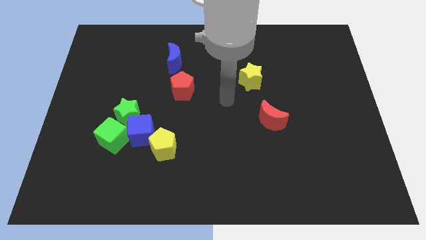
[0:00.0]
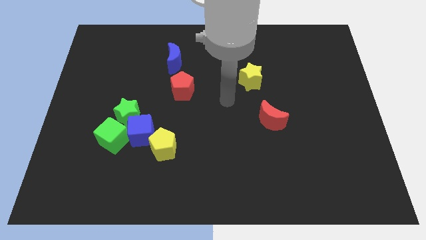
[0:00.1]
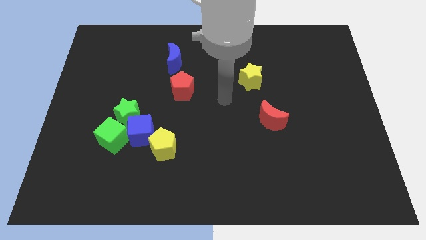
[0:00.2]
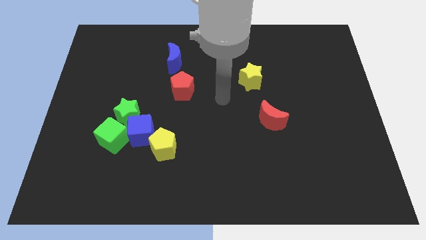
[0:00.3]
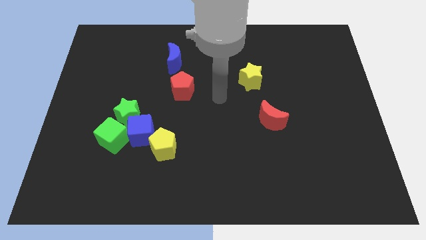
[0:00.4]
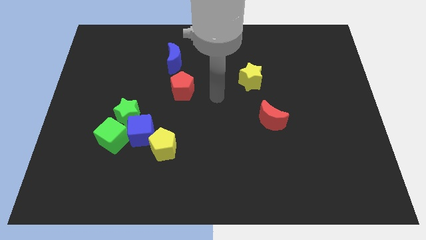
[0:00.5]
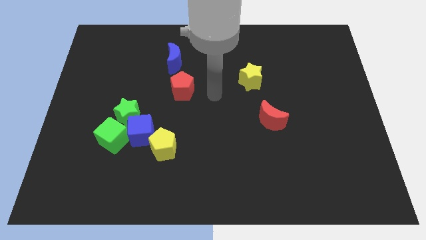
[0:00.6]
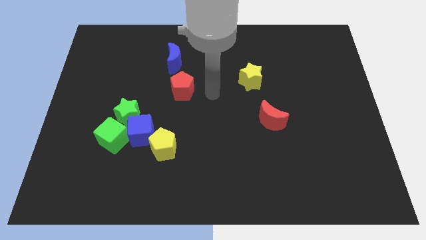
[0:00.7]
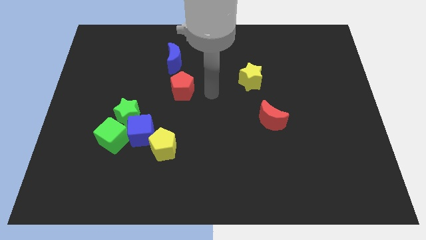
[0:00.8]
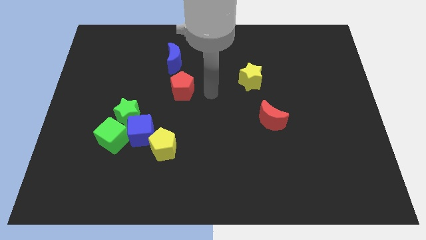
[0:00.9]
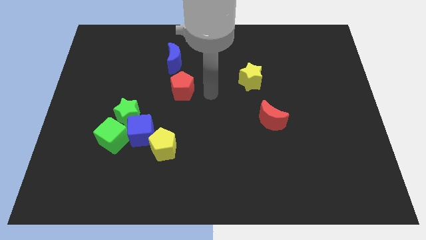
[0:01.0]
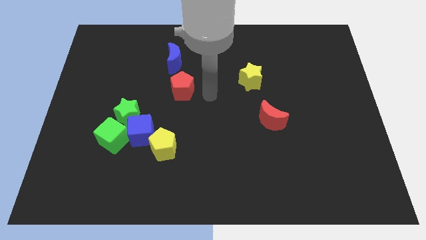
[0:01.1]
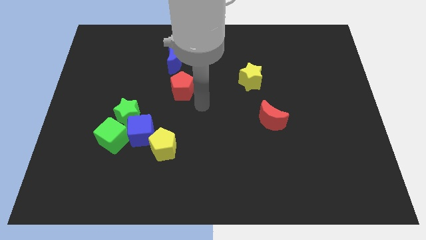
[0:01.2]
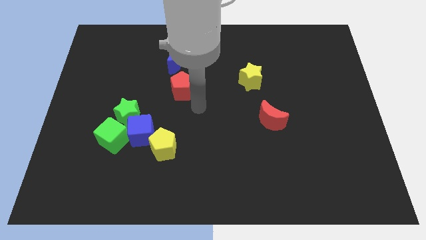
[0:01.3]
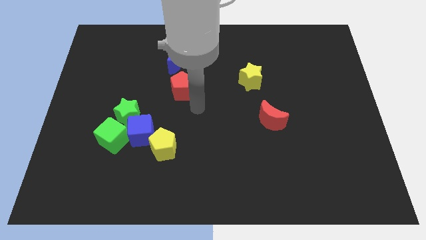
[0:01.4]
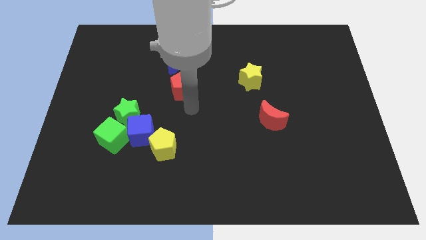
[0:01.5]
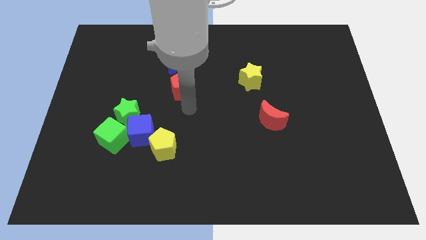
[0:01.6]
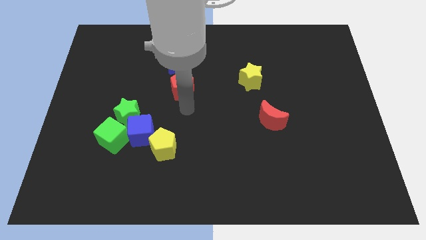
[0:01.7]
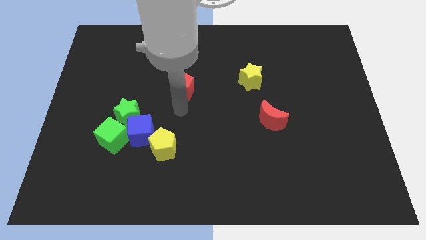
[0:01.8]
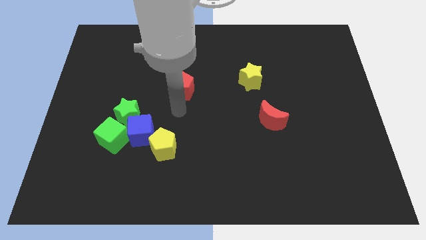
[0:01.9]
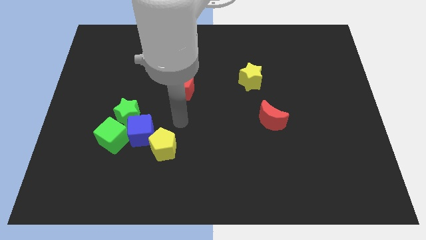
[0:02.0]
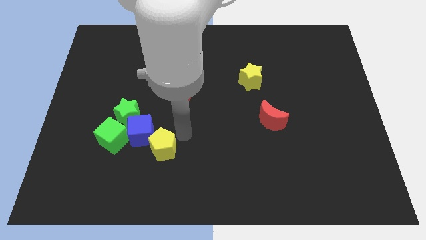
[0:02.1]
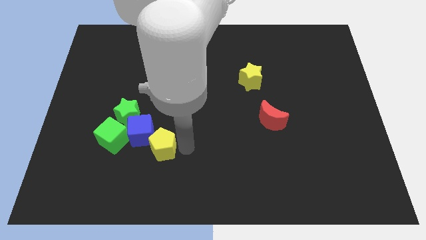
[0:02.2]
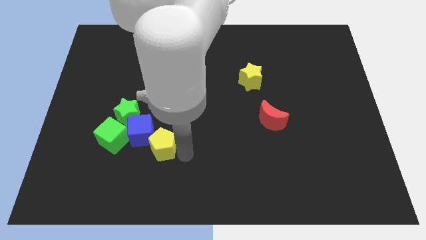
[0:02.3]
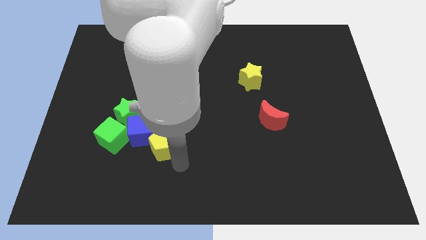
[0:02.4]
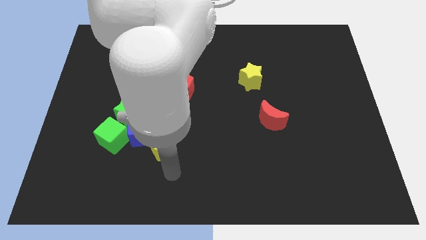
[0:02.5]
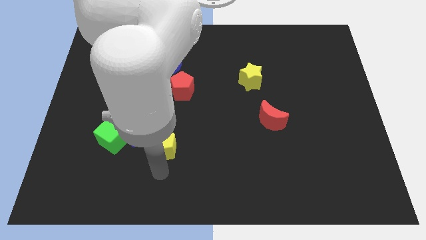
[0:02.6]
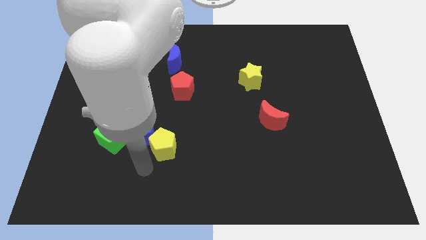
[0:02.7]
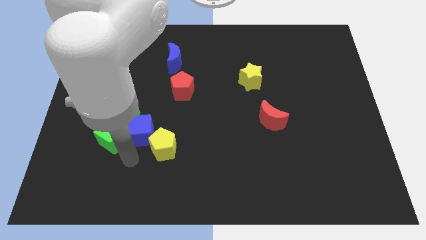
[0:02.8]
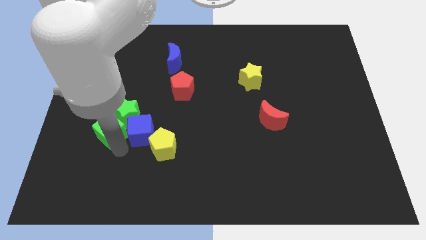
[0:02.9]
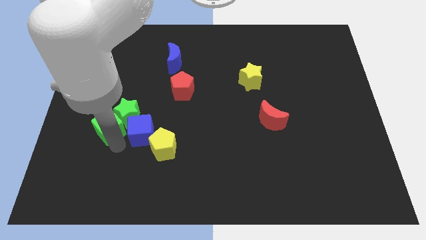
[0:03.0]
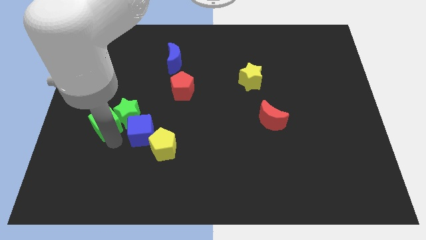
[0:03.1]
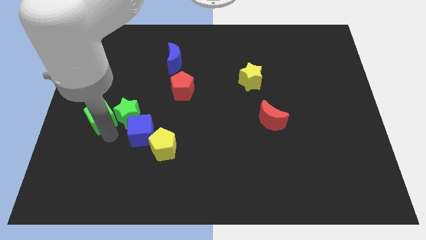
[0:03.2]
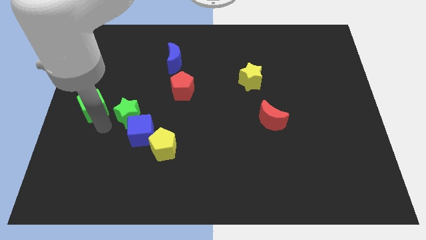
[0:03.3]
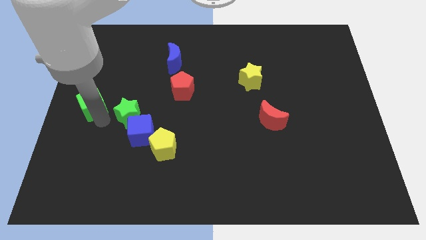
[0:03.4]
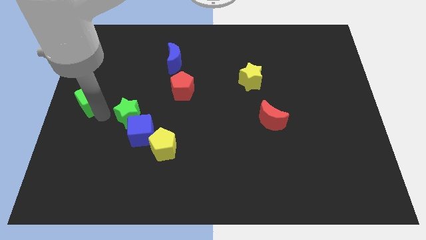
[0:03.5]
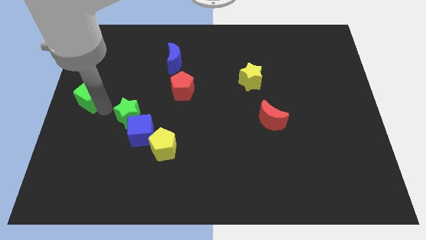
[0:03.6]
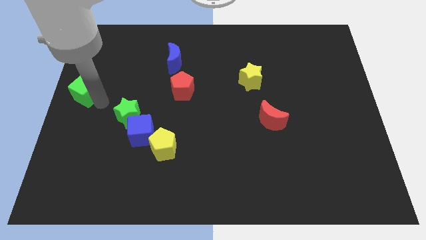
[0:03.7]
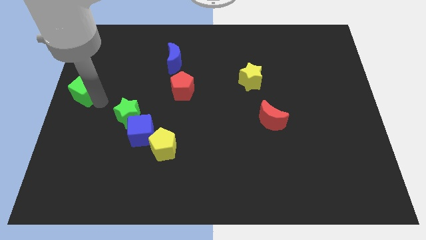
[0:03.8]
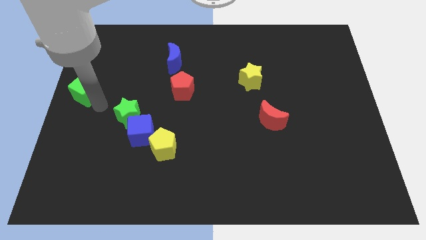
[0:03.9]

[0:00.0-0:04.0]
place the green cube parallel to the red pentagon

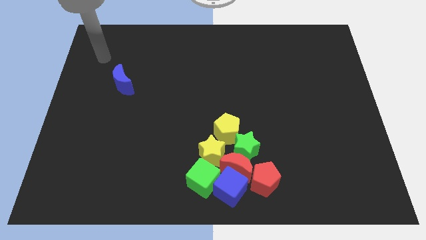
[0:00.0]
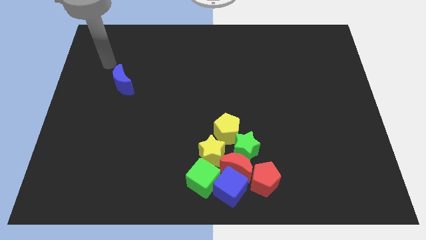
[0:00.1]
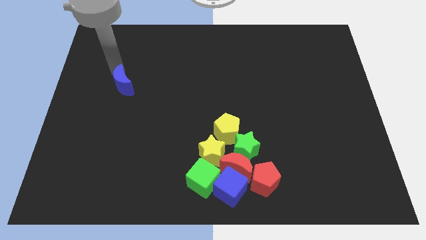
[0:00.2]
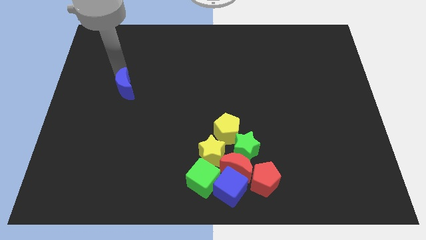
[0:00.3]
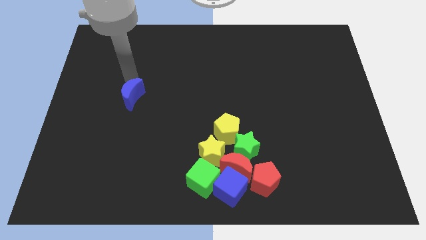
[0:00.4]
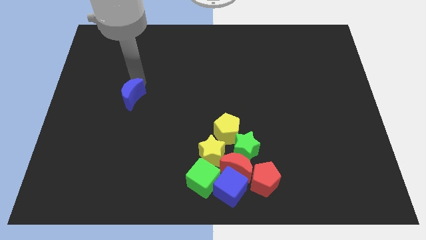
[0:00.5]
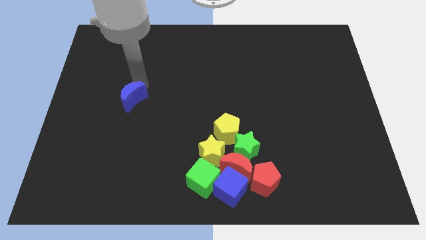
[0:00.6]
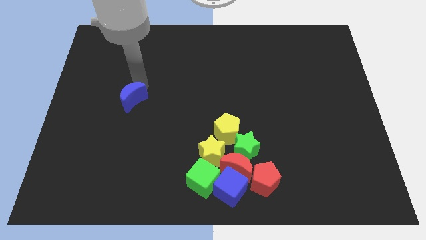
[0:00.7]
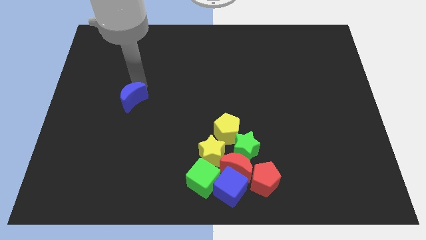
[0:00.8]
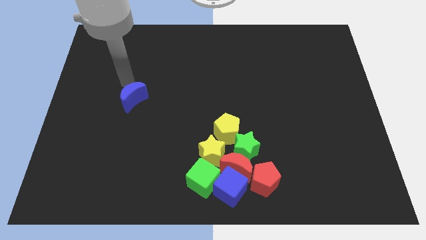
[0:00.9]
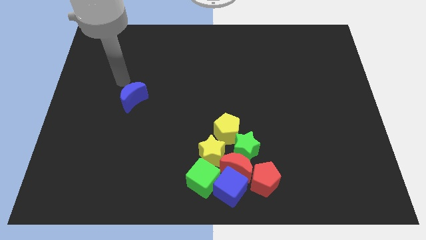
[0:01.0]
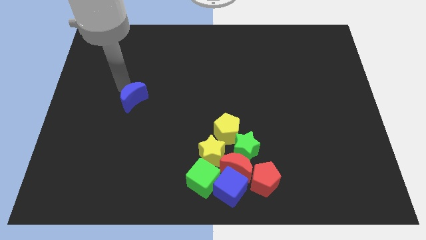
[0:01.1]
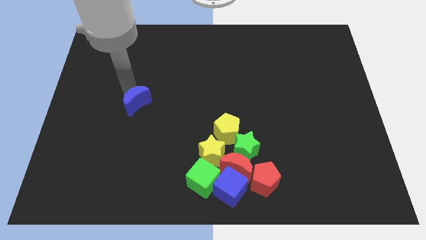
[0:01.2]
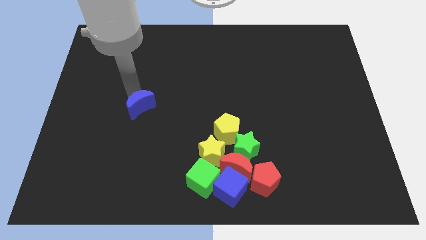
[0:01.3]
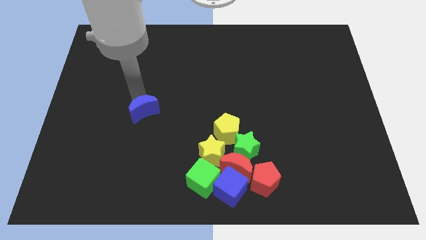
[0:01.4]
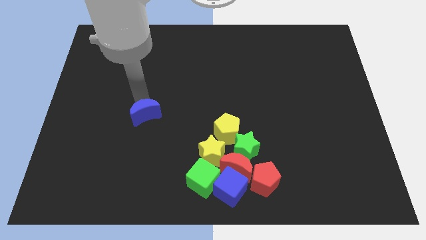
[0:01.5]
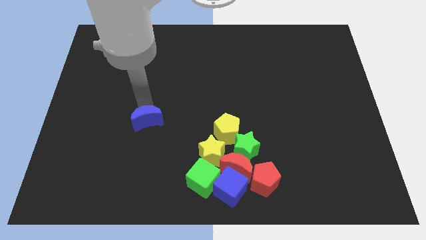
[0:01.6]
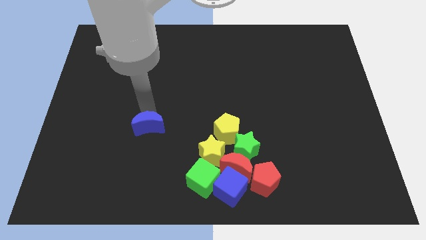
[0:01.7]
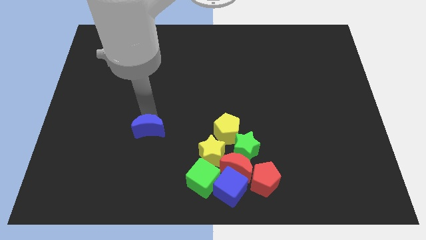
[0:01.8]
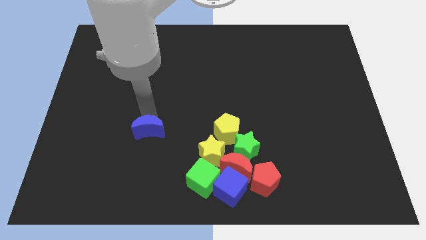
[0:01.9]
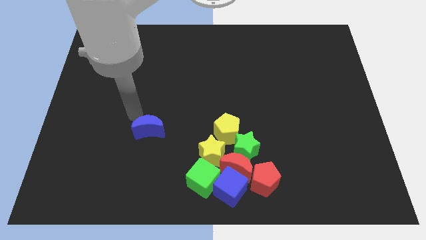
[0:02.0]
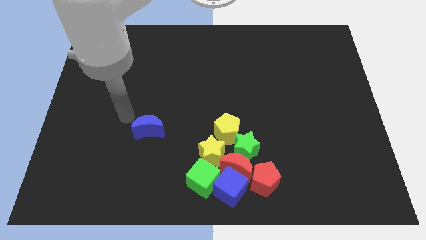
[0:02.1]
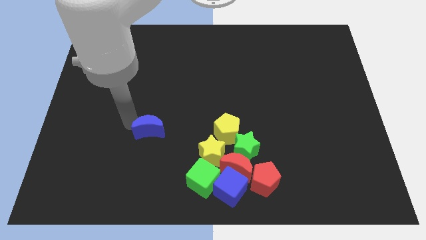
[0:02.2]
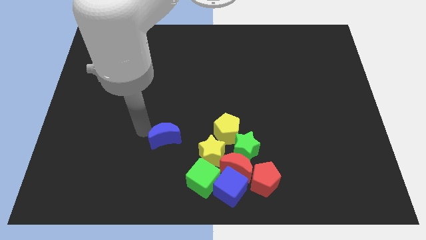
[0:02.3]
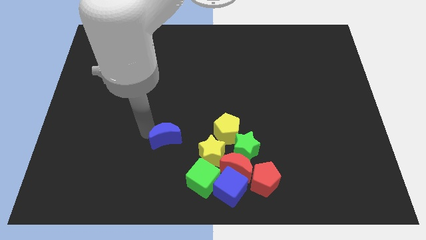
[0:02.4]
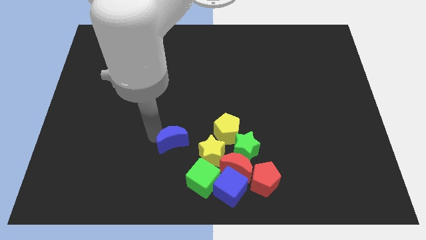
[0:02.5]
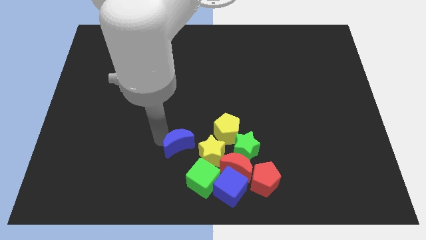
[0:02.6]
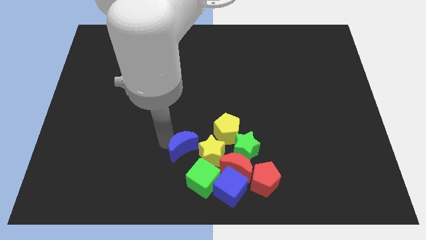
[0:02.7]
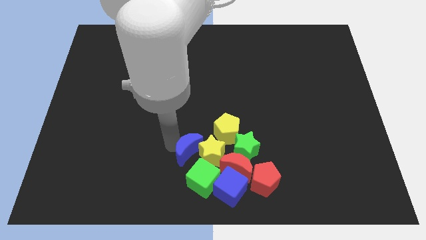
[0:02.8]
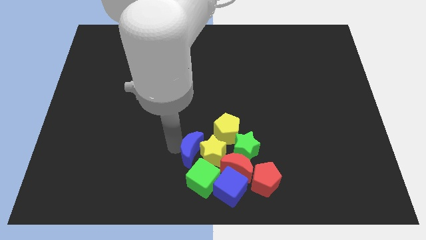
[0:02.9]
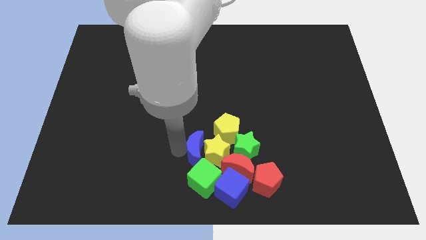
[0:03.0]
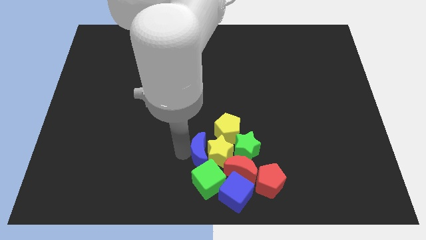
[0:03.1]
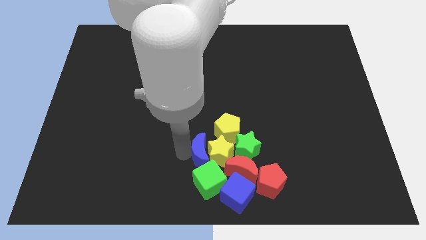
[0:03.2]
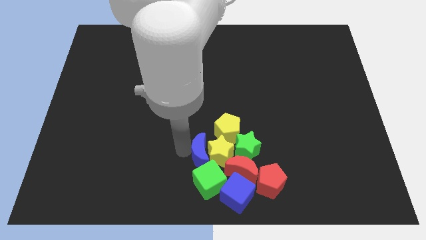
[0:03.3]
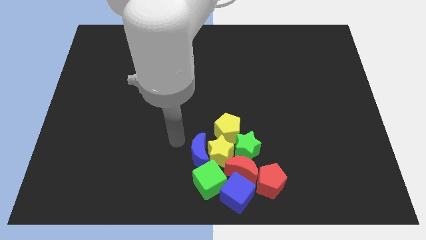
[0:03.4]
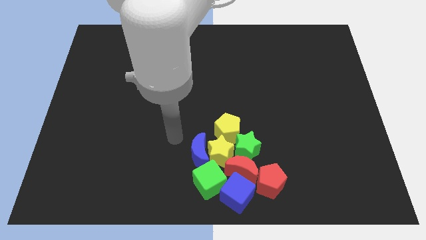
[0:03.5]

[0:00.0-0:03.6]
push the blue moon into the yellow star

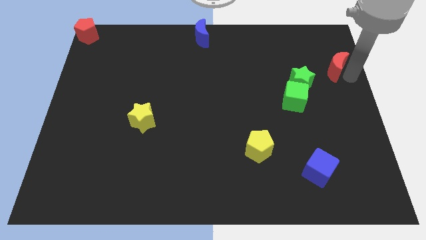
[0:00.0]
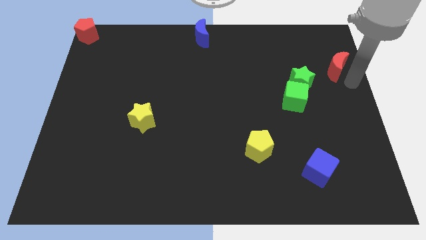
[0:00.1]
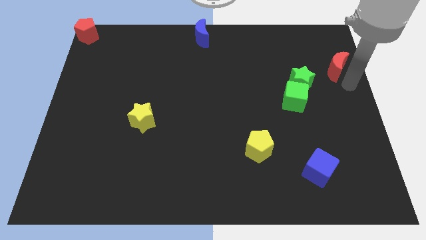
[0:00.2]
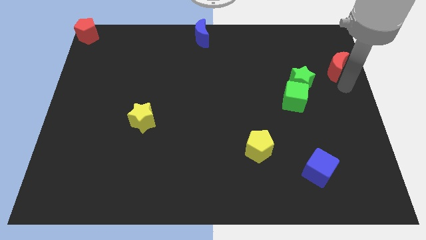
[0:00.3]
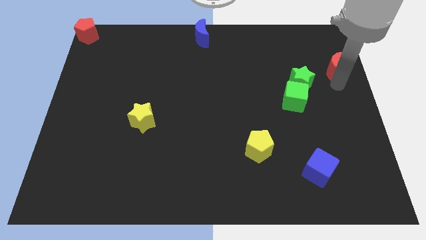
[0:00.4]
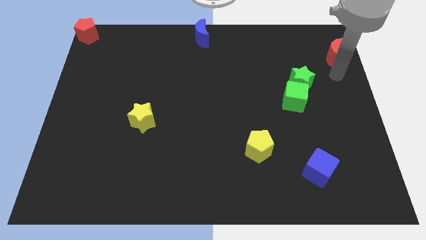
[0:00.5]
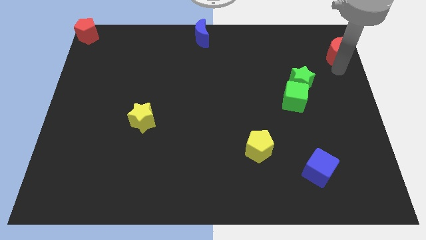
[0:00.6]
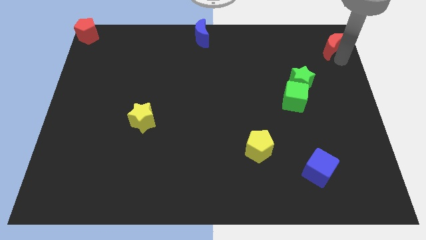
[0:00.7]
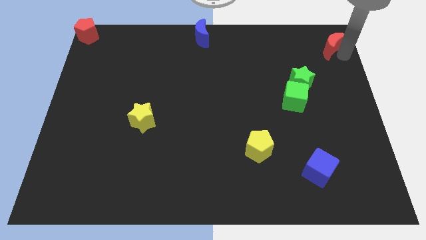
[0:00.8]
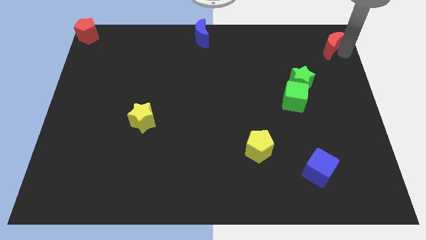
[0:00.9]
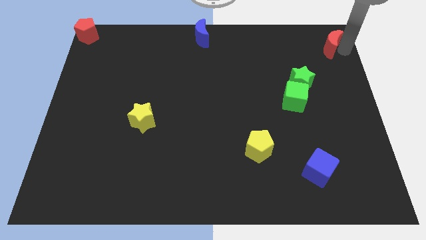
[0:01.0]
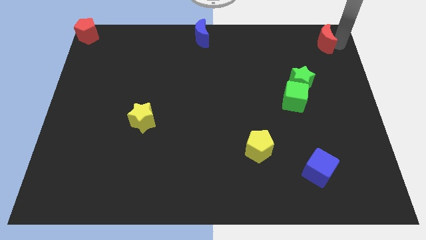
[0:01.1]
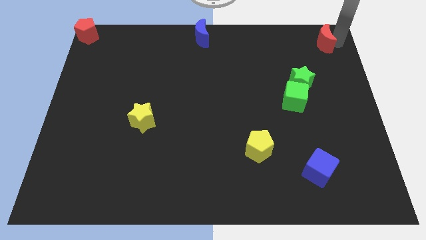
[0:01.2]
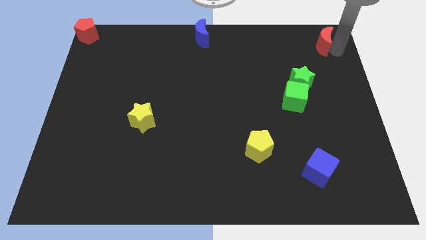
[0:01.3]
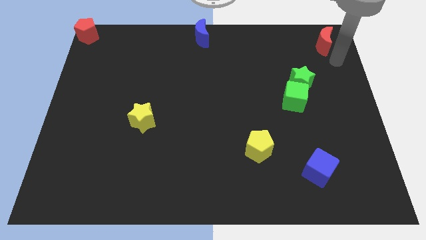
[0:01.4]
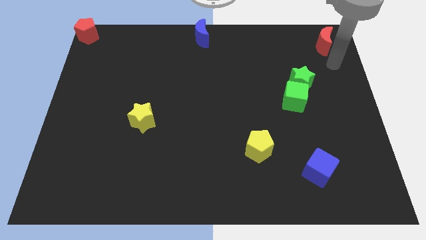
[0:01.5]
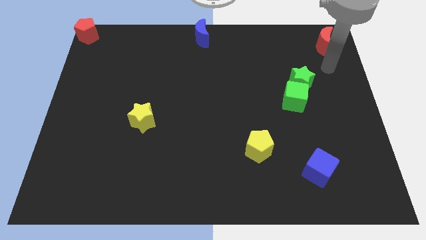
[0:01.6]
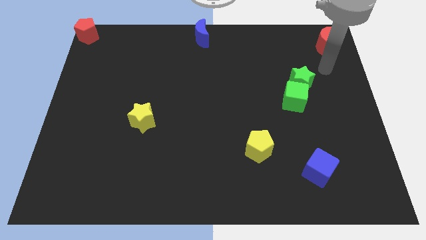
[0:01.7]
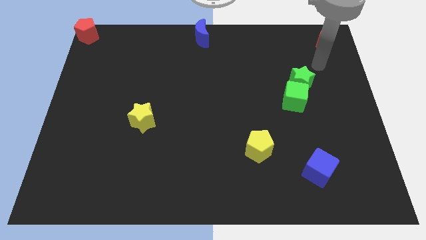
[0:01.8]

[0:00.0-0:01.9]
place the red moon at the top right corner
